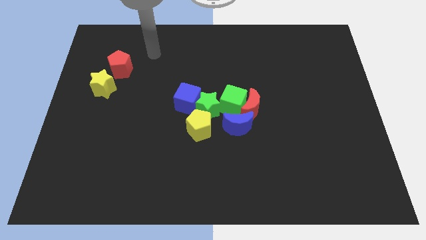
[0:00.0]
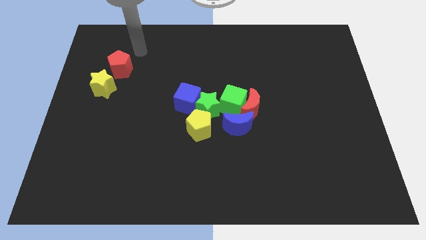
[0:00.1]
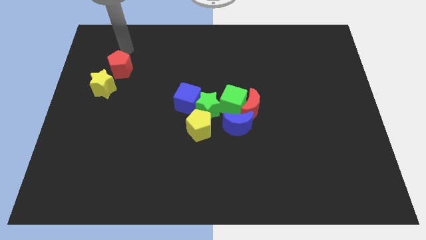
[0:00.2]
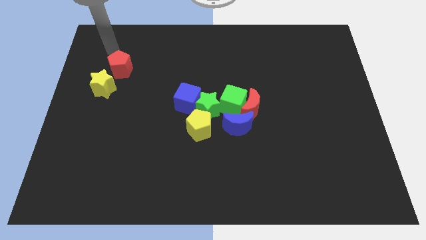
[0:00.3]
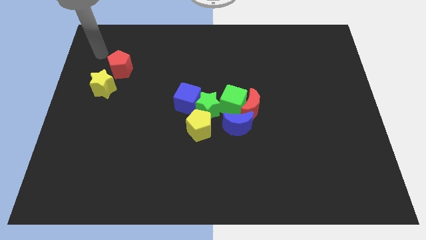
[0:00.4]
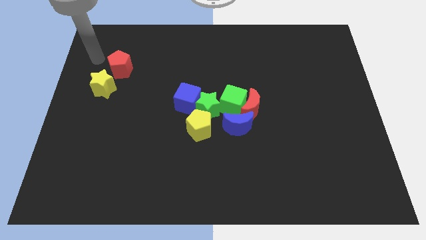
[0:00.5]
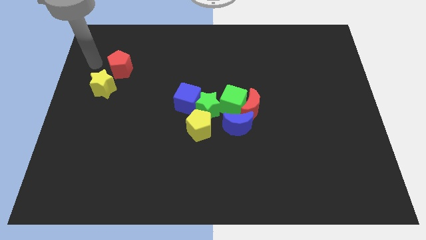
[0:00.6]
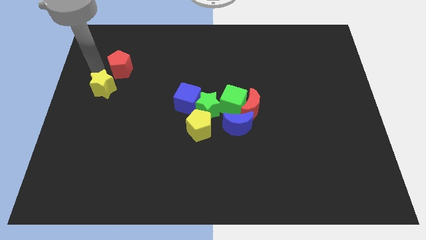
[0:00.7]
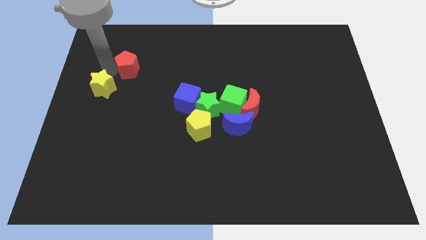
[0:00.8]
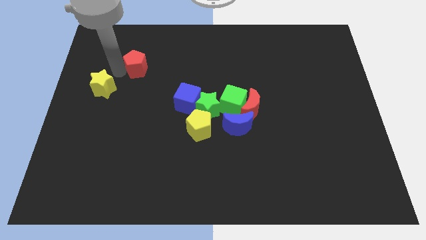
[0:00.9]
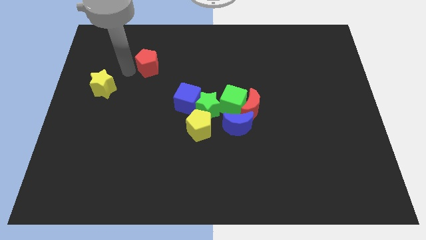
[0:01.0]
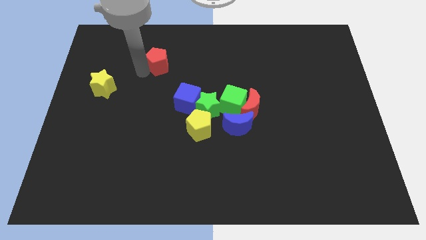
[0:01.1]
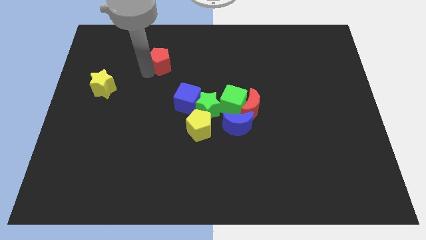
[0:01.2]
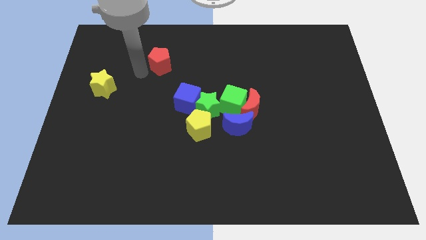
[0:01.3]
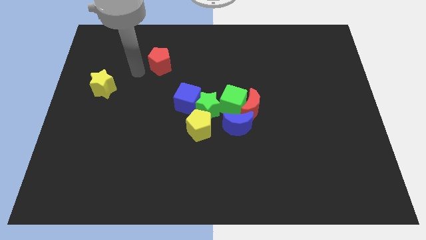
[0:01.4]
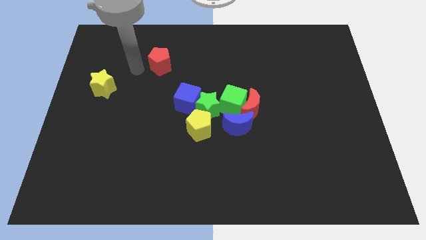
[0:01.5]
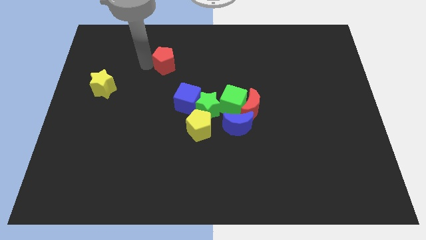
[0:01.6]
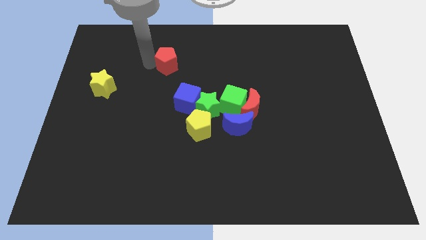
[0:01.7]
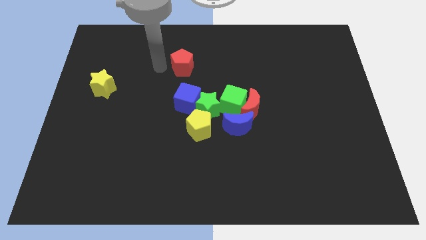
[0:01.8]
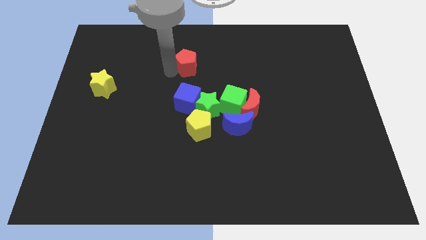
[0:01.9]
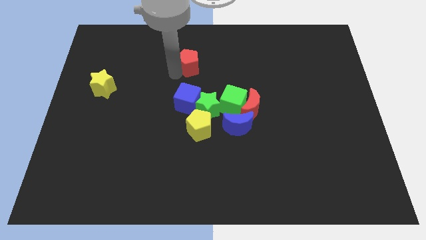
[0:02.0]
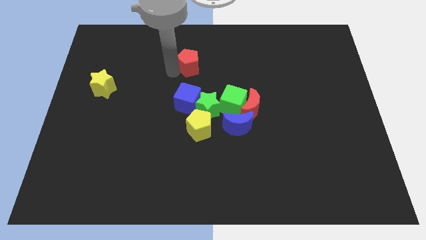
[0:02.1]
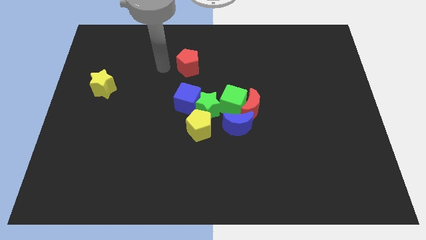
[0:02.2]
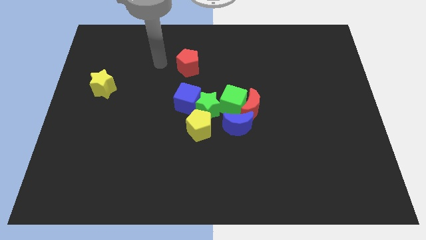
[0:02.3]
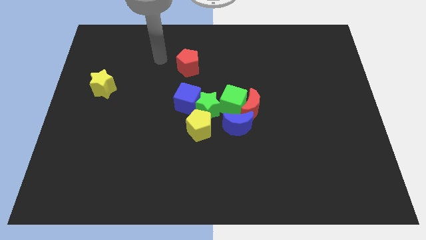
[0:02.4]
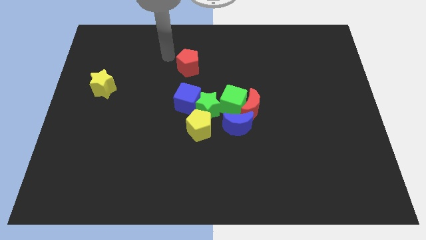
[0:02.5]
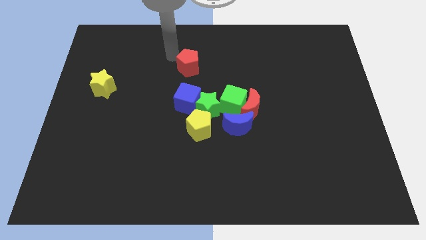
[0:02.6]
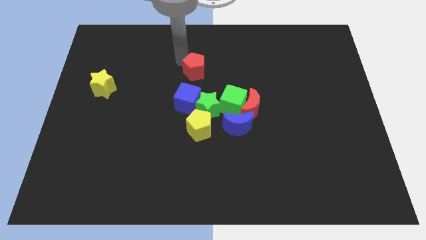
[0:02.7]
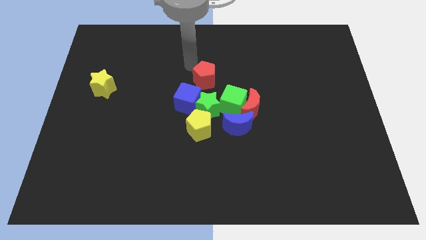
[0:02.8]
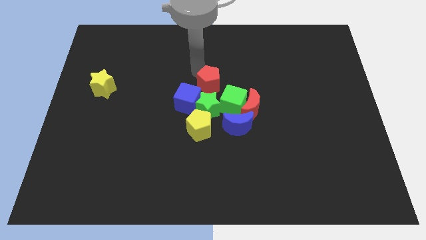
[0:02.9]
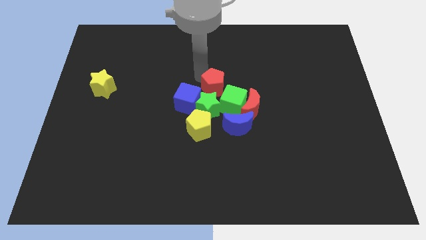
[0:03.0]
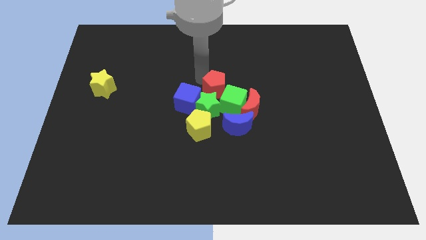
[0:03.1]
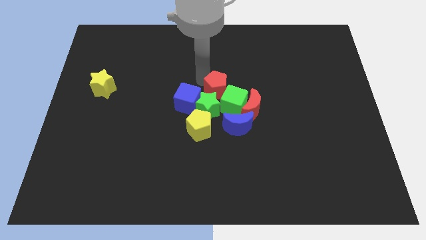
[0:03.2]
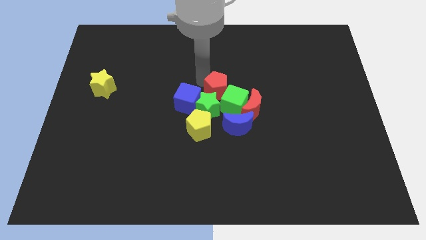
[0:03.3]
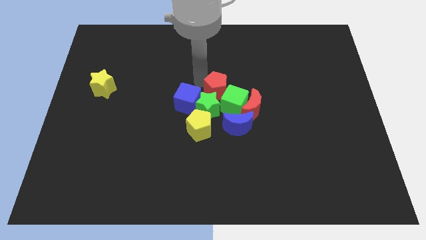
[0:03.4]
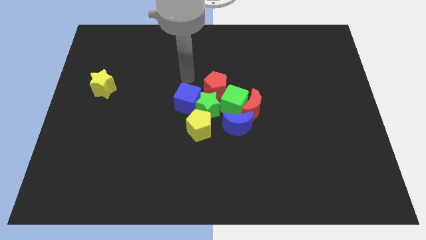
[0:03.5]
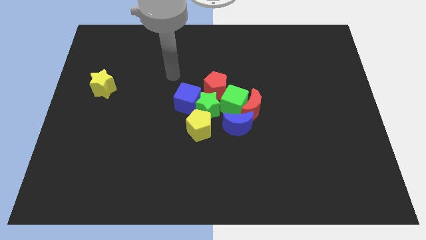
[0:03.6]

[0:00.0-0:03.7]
push the red pentagon into the green star which is in the middle of the board

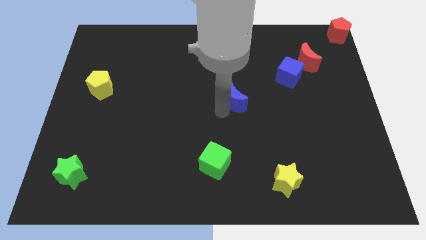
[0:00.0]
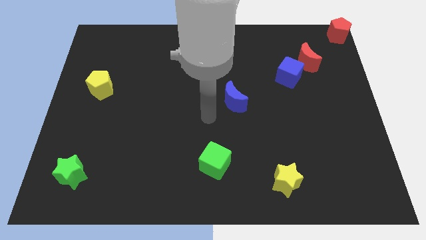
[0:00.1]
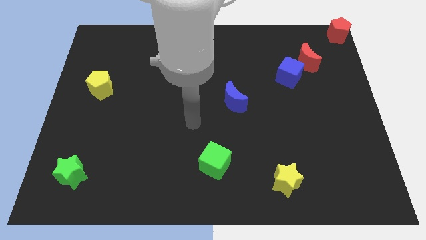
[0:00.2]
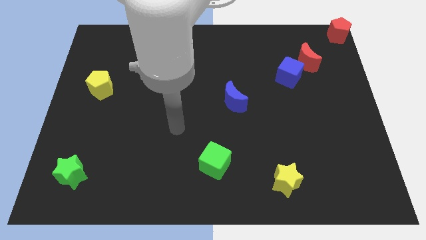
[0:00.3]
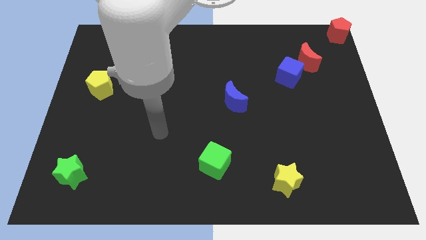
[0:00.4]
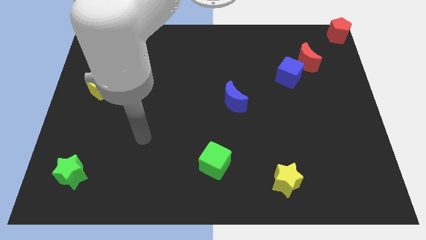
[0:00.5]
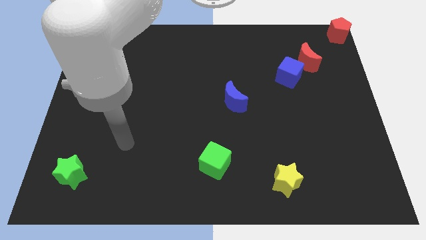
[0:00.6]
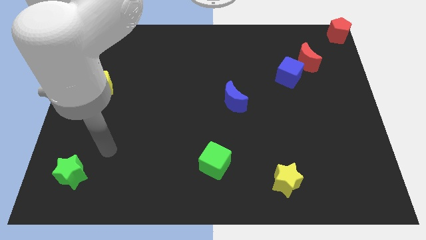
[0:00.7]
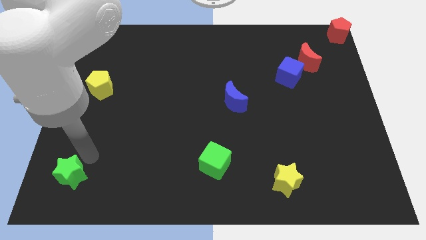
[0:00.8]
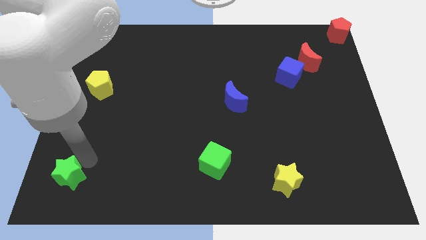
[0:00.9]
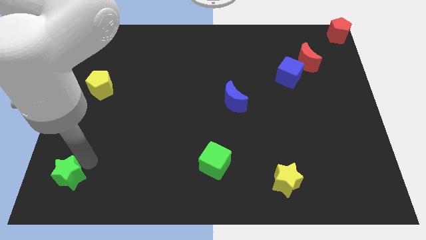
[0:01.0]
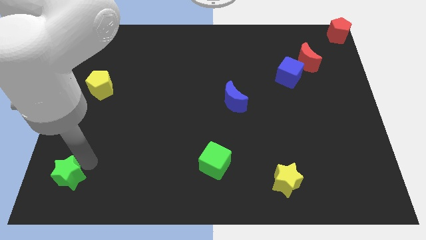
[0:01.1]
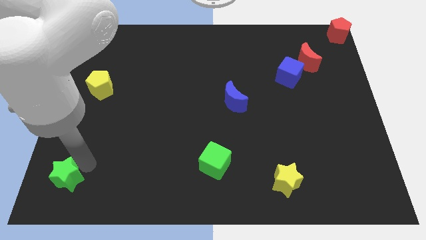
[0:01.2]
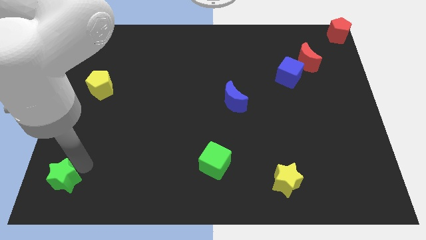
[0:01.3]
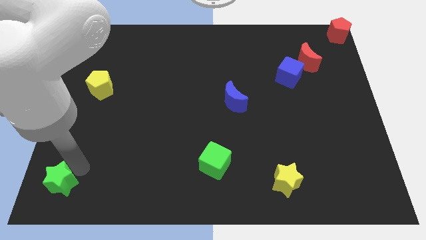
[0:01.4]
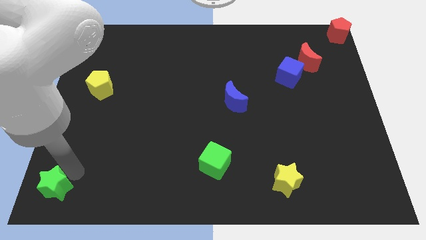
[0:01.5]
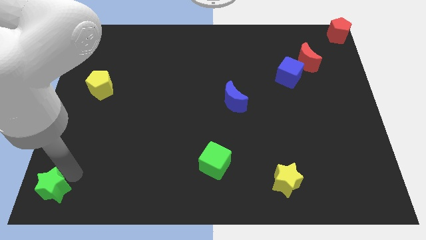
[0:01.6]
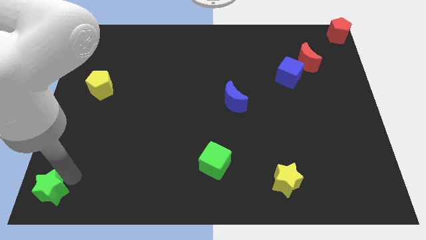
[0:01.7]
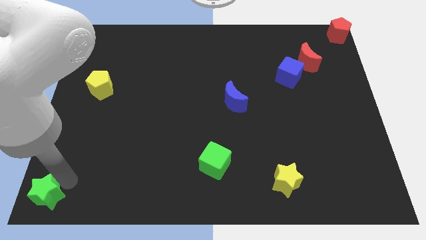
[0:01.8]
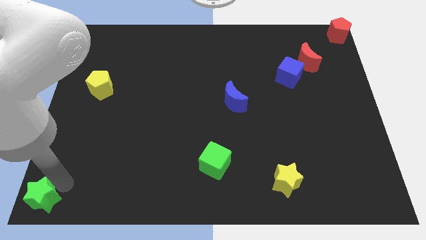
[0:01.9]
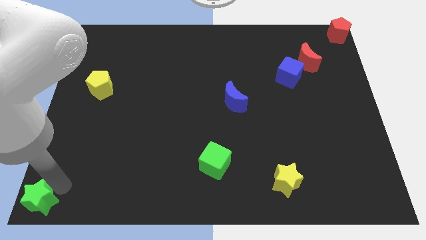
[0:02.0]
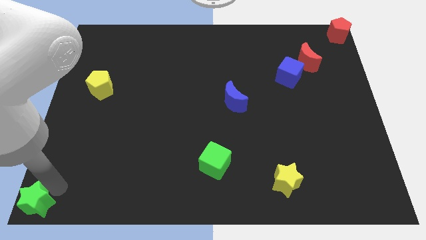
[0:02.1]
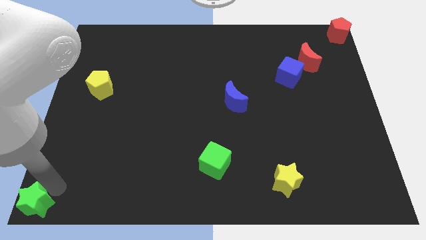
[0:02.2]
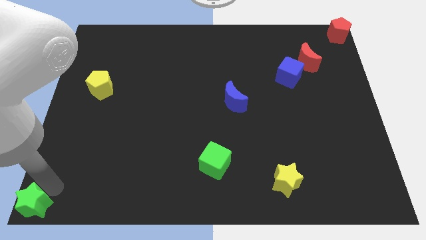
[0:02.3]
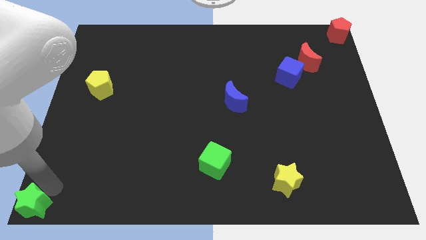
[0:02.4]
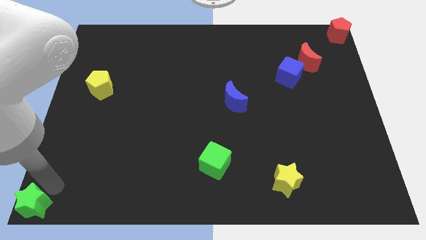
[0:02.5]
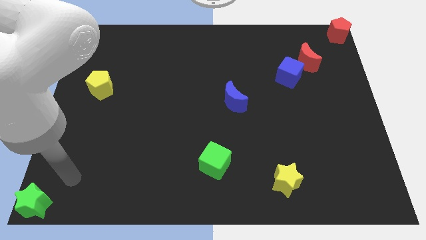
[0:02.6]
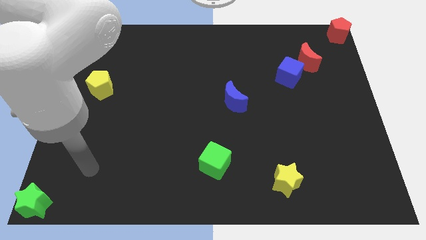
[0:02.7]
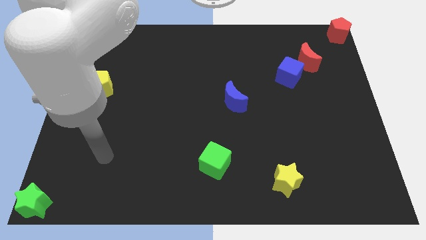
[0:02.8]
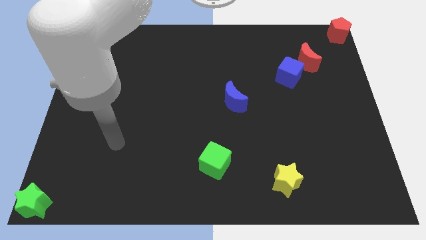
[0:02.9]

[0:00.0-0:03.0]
push the green star to the bottom left corner of the board

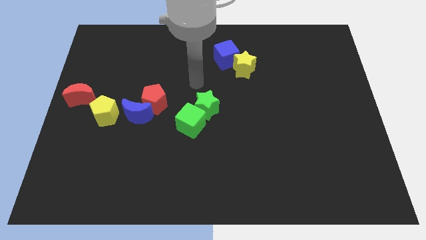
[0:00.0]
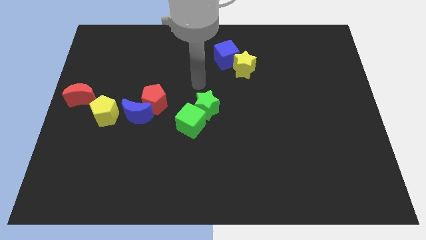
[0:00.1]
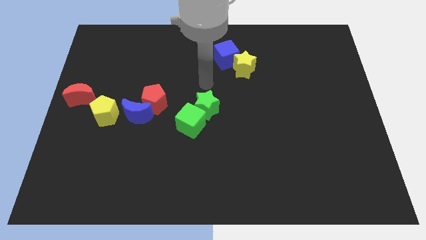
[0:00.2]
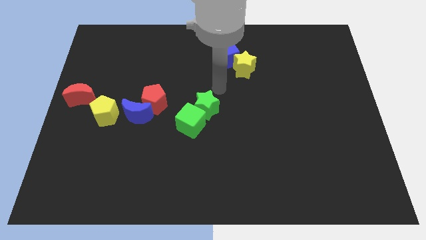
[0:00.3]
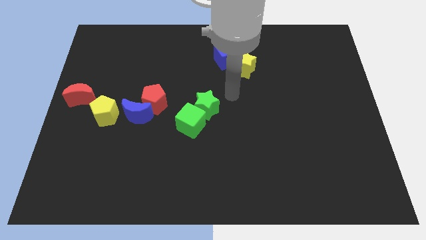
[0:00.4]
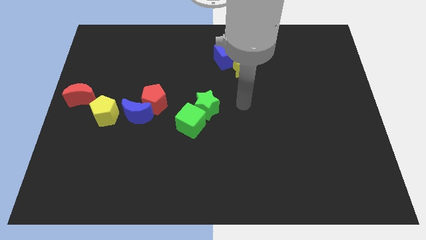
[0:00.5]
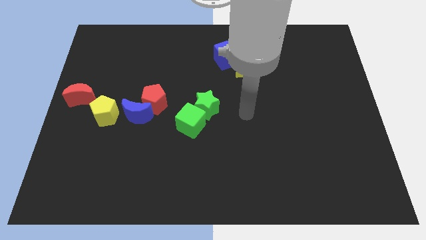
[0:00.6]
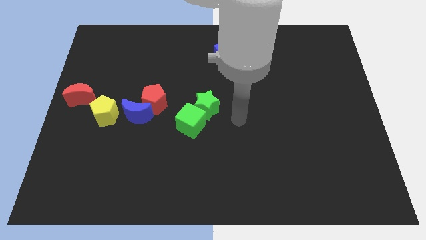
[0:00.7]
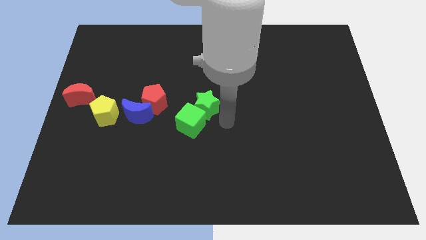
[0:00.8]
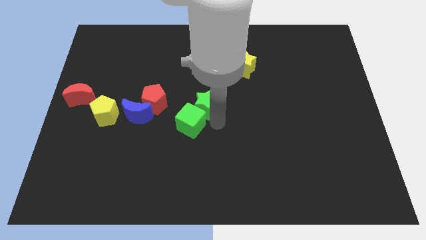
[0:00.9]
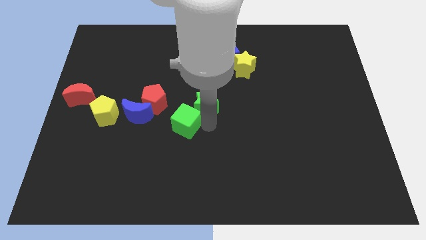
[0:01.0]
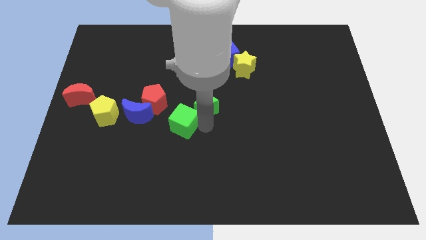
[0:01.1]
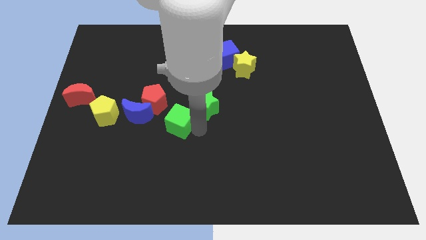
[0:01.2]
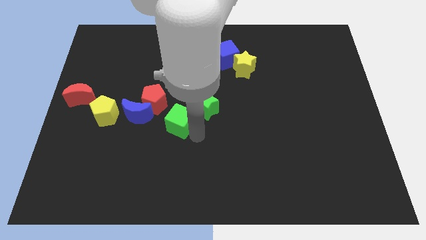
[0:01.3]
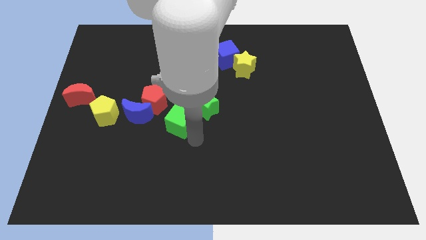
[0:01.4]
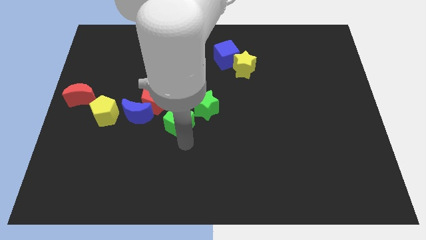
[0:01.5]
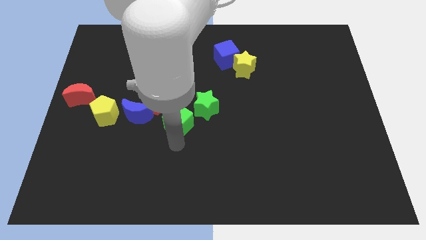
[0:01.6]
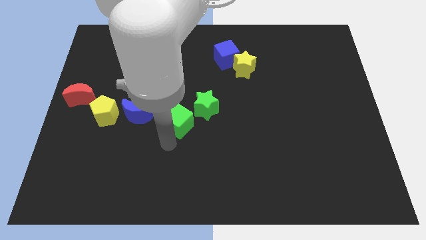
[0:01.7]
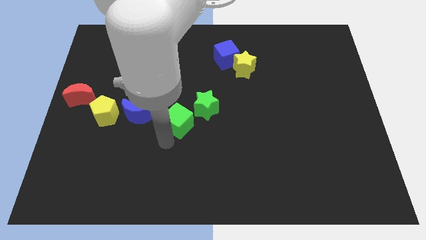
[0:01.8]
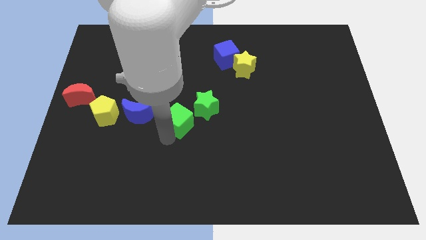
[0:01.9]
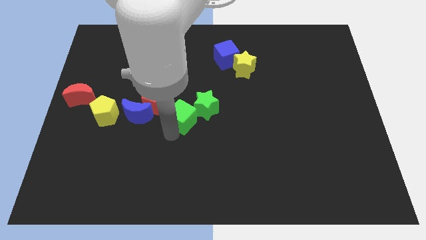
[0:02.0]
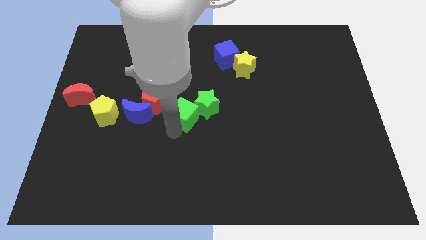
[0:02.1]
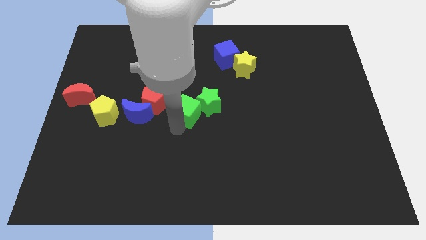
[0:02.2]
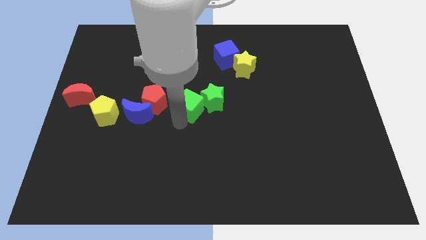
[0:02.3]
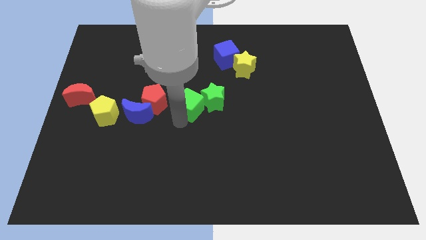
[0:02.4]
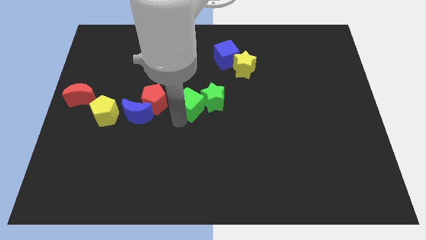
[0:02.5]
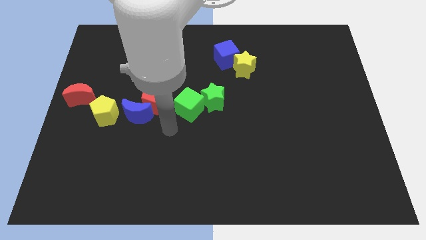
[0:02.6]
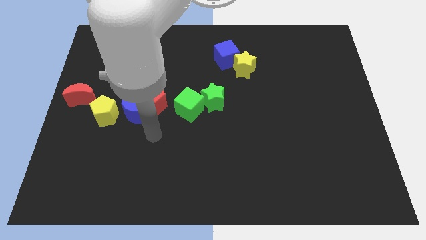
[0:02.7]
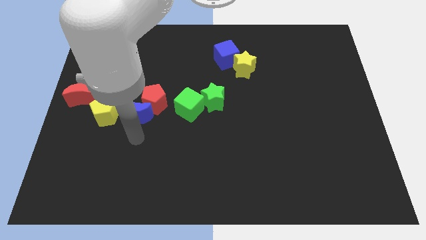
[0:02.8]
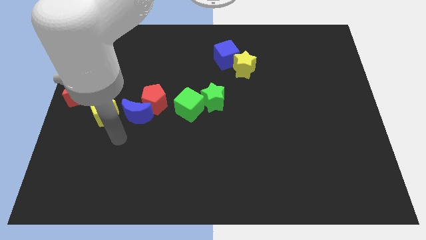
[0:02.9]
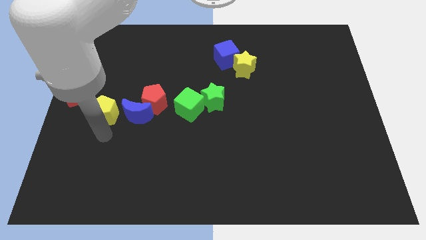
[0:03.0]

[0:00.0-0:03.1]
push the group of green blocks towards the top side of the board
